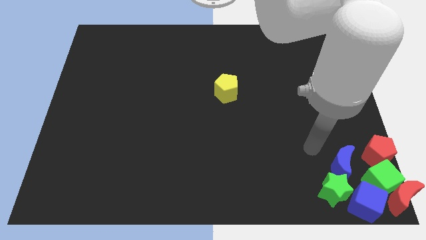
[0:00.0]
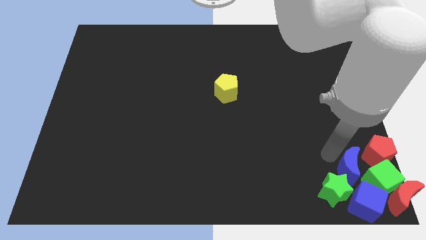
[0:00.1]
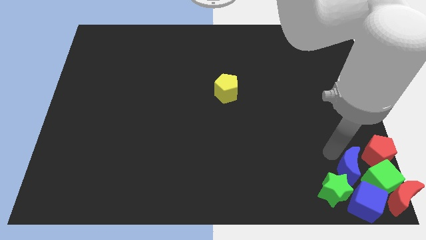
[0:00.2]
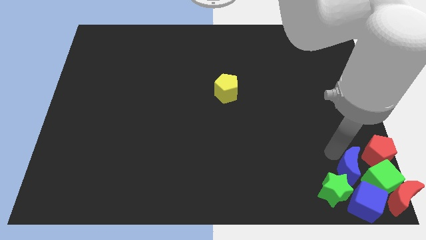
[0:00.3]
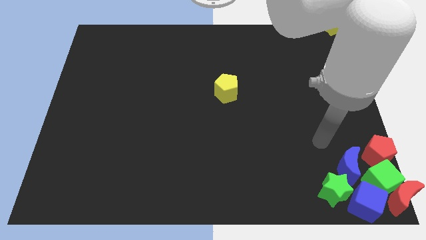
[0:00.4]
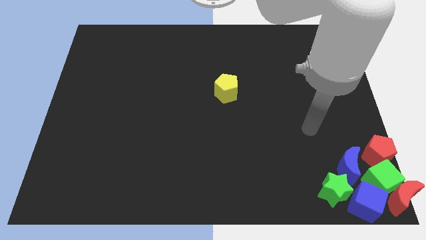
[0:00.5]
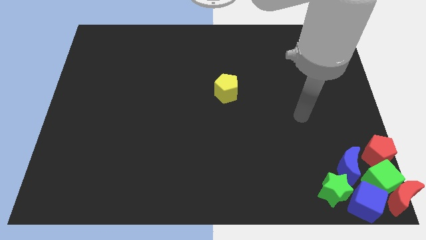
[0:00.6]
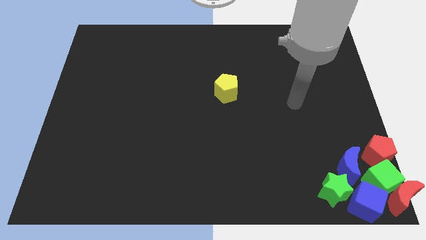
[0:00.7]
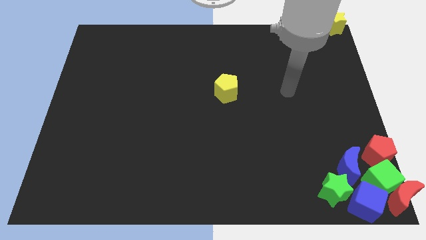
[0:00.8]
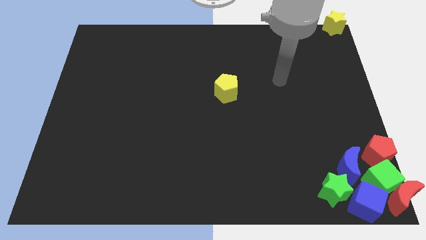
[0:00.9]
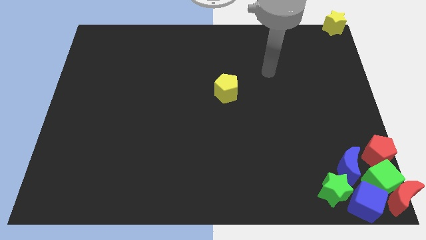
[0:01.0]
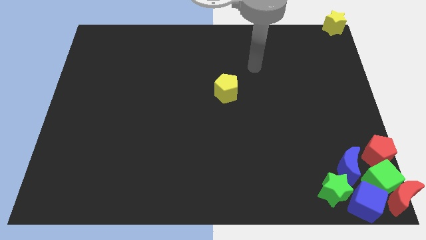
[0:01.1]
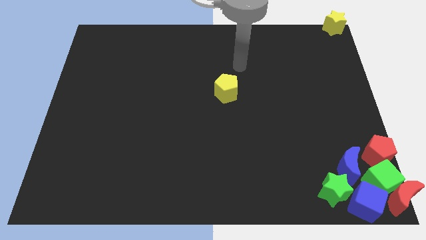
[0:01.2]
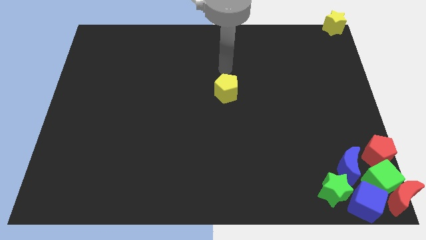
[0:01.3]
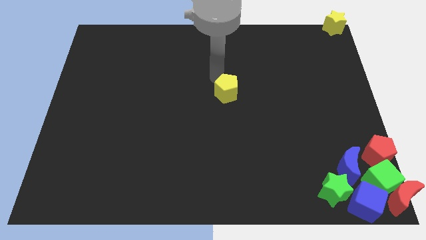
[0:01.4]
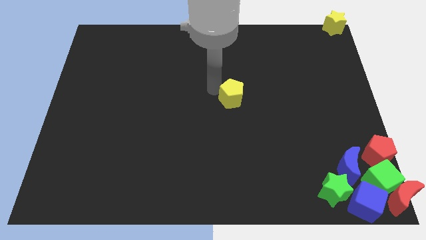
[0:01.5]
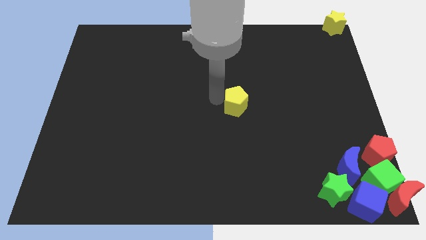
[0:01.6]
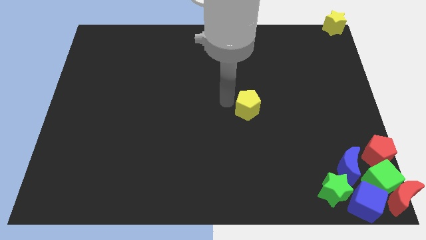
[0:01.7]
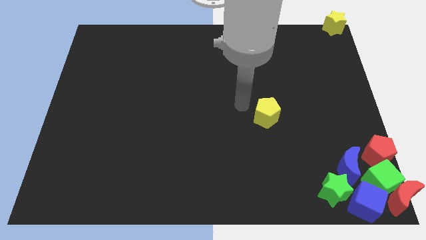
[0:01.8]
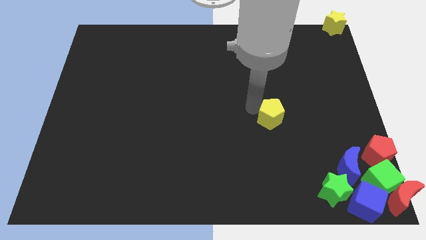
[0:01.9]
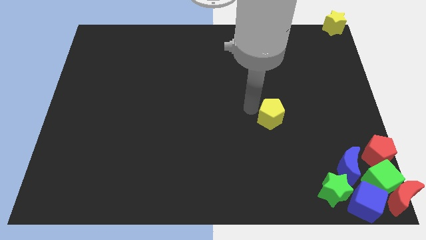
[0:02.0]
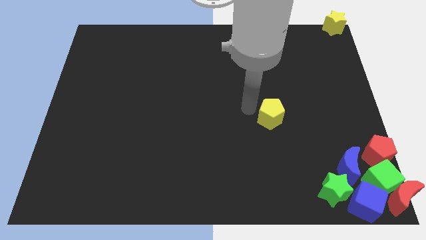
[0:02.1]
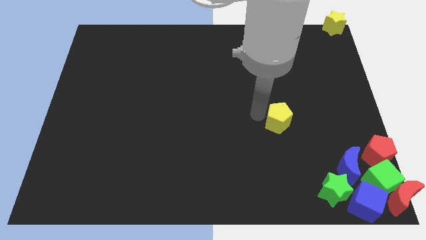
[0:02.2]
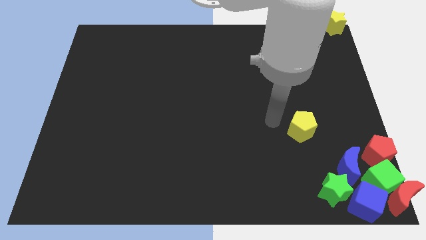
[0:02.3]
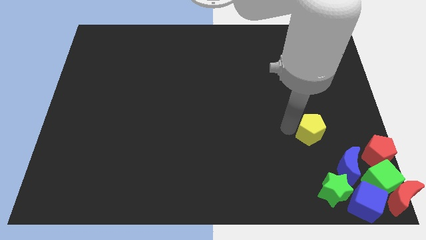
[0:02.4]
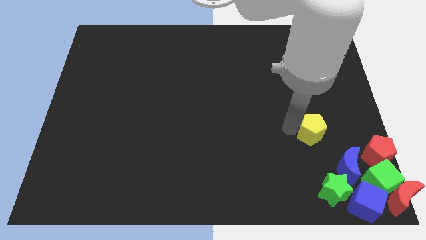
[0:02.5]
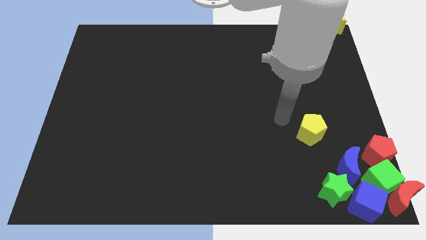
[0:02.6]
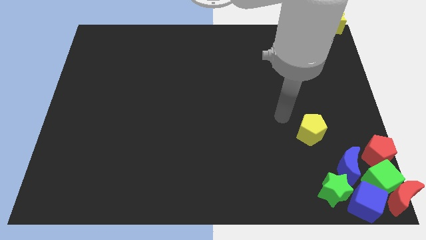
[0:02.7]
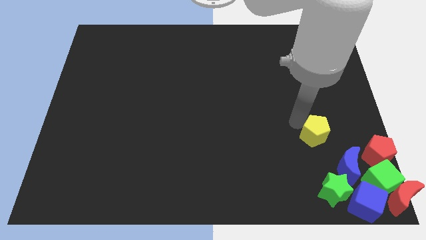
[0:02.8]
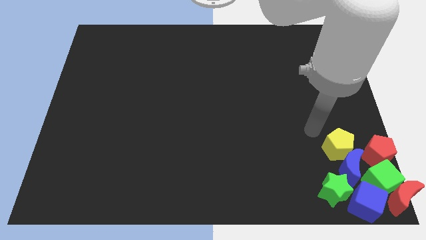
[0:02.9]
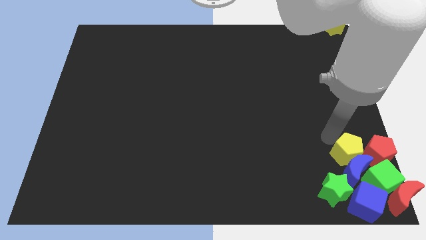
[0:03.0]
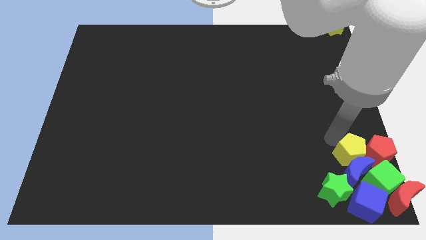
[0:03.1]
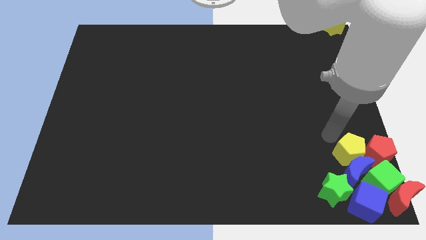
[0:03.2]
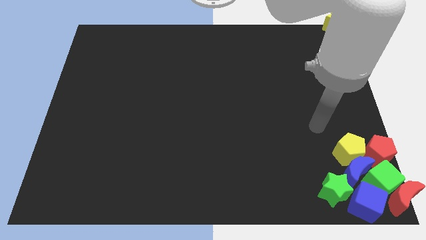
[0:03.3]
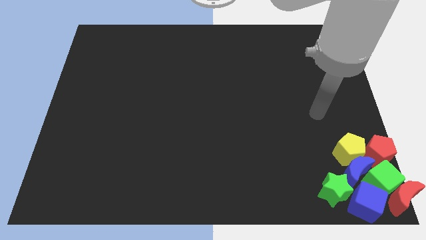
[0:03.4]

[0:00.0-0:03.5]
place yellow pentagon above blue crescent

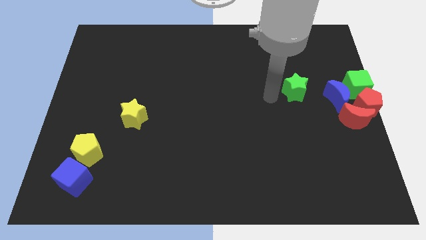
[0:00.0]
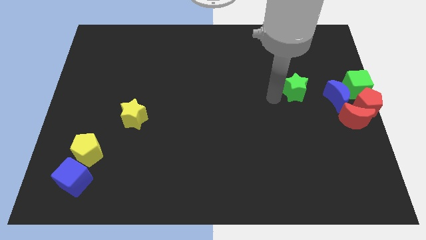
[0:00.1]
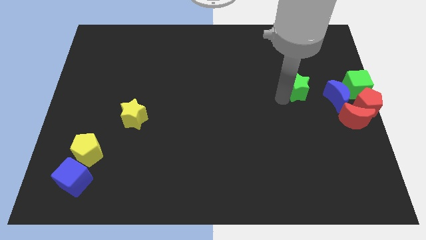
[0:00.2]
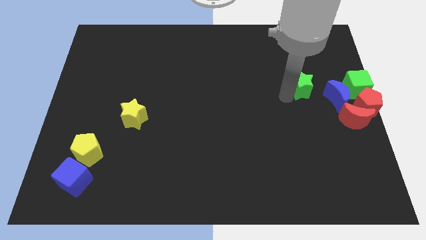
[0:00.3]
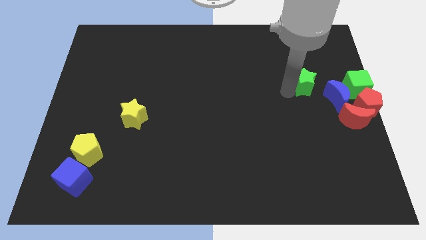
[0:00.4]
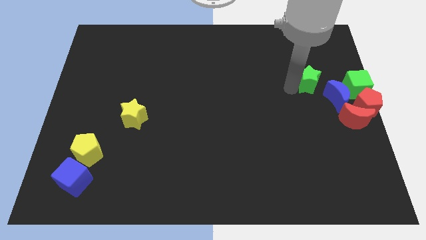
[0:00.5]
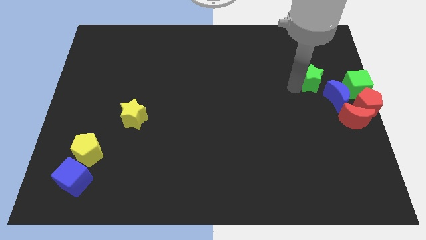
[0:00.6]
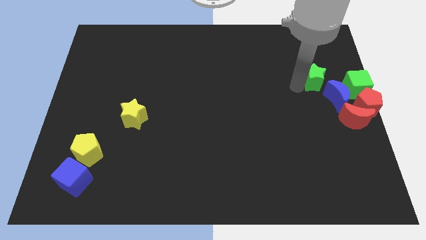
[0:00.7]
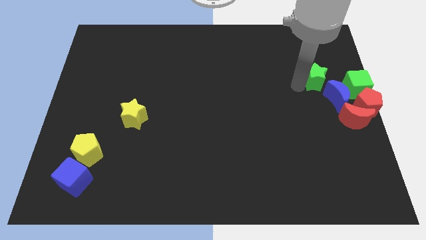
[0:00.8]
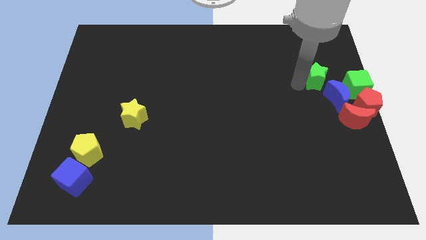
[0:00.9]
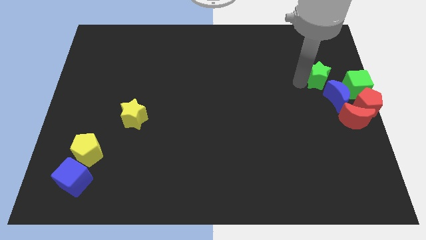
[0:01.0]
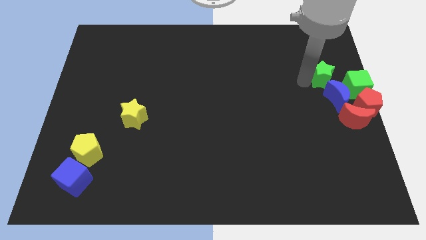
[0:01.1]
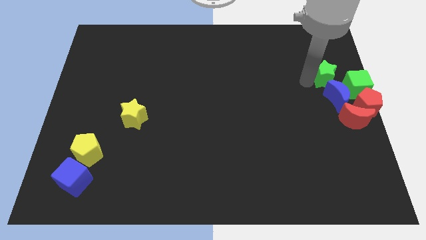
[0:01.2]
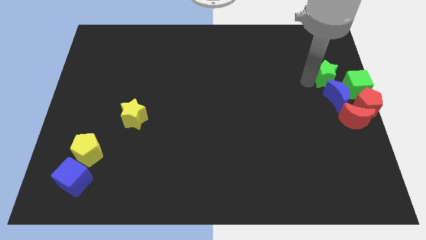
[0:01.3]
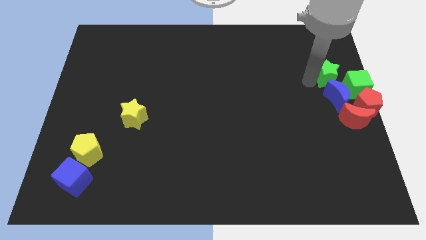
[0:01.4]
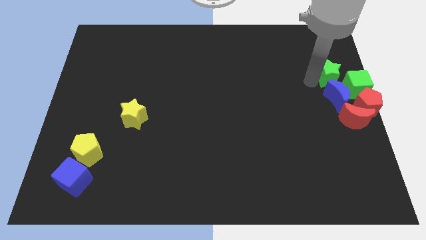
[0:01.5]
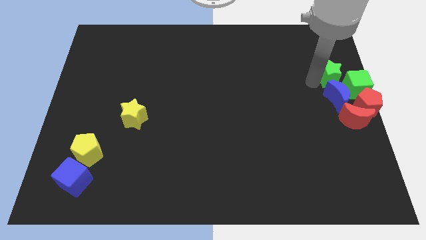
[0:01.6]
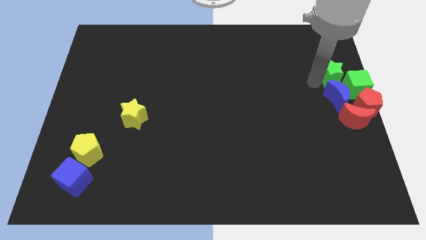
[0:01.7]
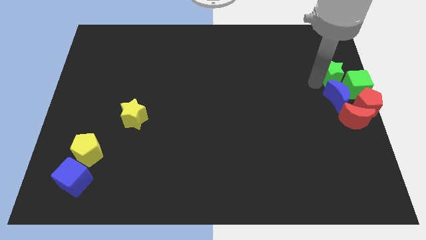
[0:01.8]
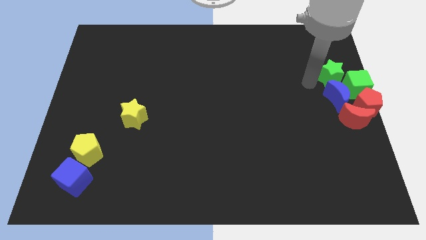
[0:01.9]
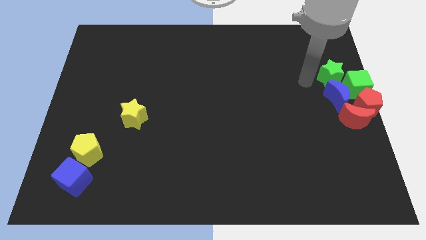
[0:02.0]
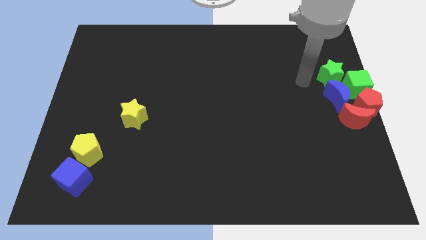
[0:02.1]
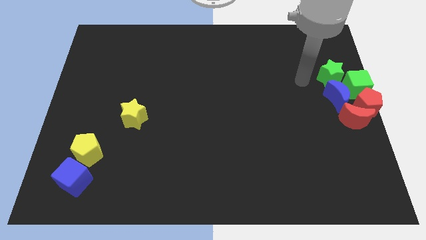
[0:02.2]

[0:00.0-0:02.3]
move the green star above the blue moon

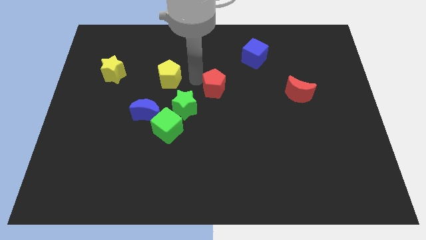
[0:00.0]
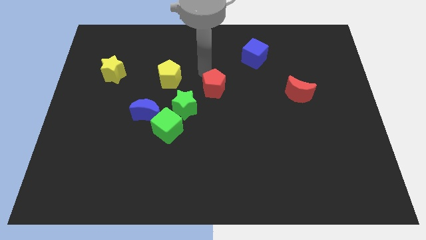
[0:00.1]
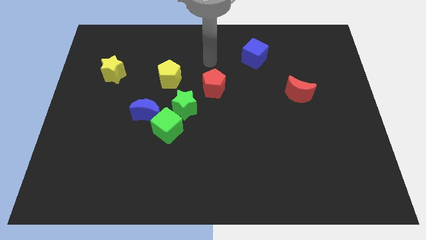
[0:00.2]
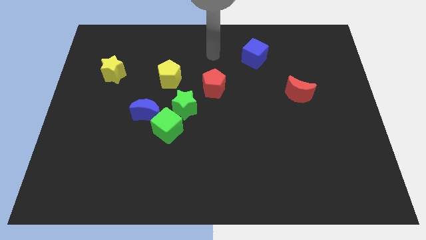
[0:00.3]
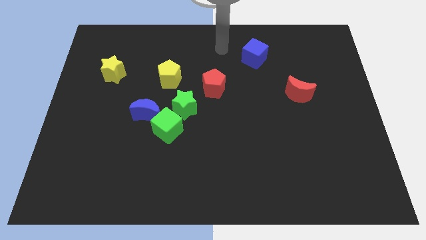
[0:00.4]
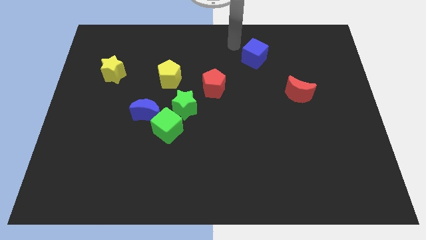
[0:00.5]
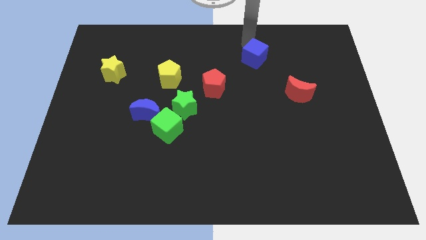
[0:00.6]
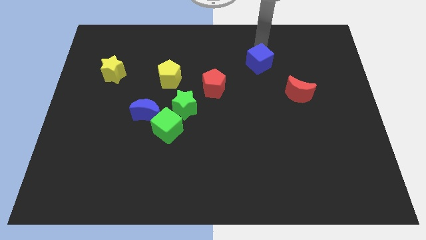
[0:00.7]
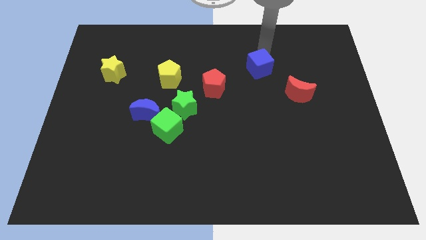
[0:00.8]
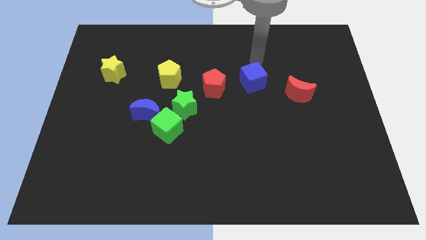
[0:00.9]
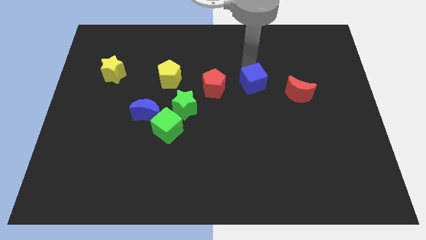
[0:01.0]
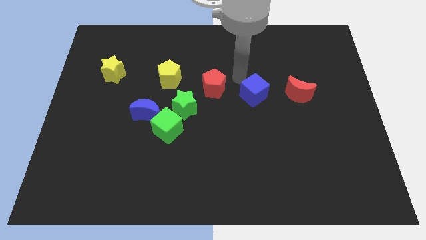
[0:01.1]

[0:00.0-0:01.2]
move the blue cube down slightly

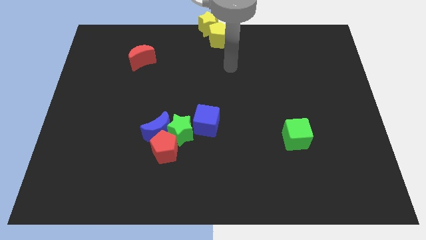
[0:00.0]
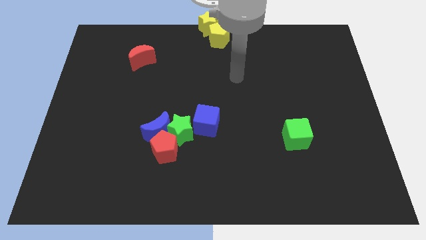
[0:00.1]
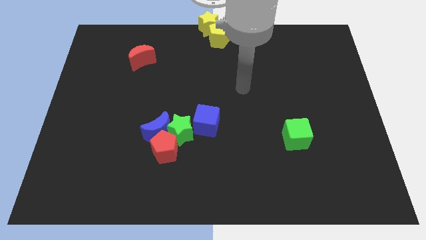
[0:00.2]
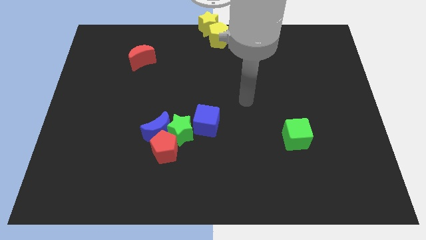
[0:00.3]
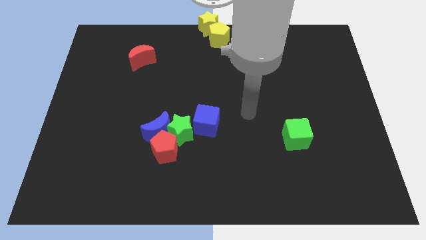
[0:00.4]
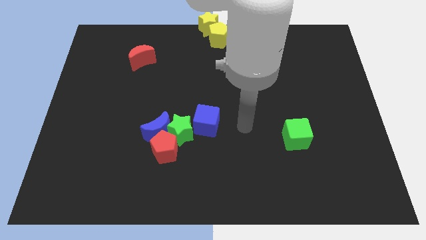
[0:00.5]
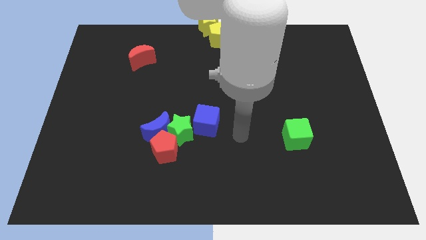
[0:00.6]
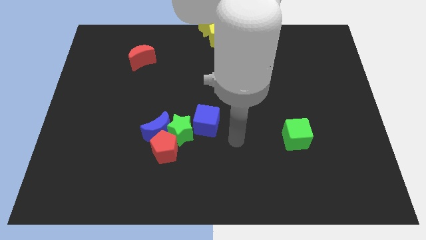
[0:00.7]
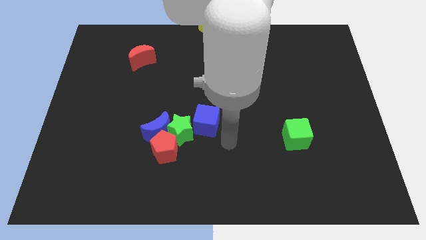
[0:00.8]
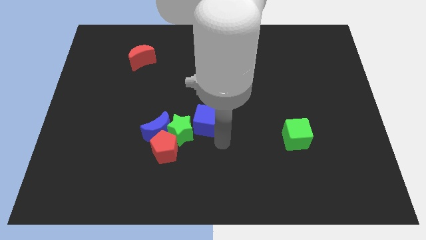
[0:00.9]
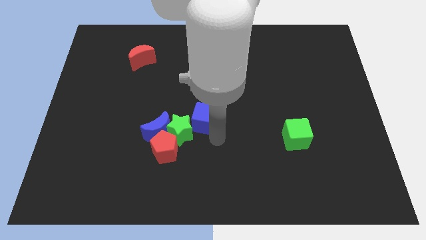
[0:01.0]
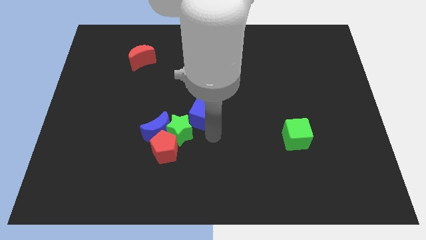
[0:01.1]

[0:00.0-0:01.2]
tap the blue cube

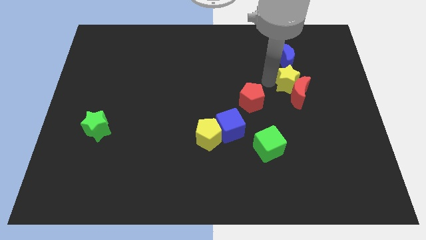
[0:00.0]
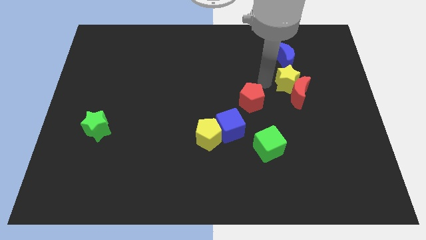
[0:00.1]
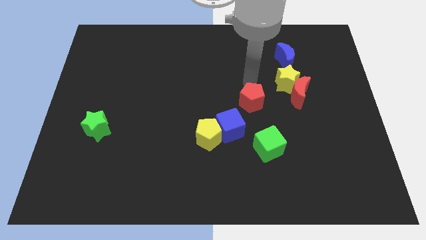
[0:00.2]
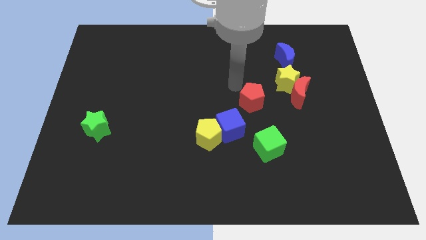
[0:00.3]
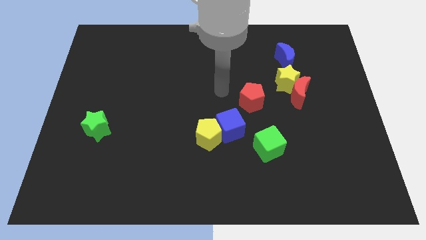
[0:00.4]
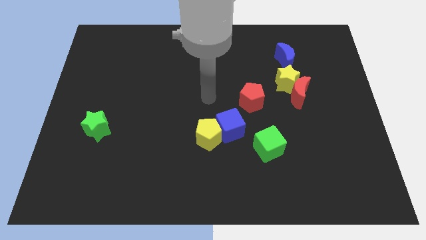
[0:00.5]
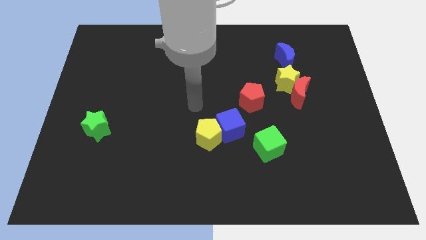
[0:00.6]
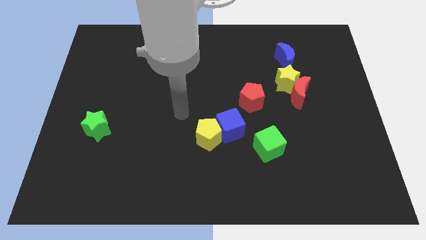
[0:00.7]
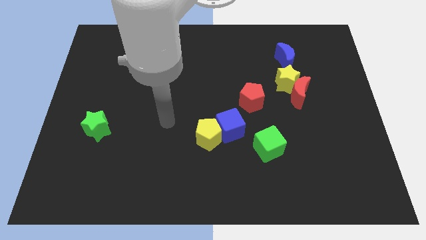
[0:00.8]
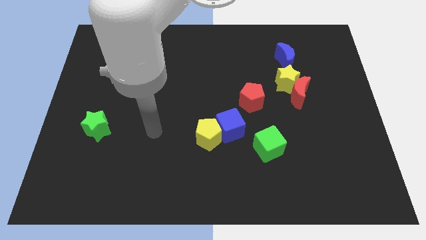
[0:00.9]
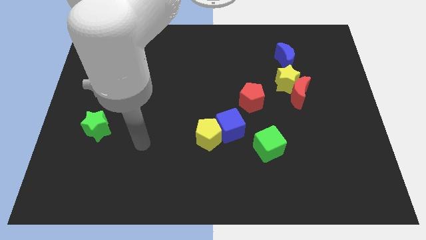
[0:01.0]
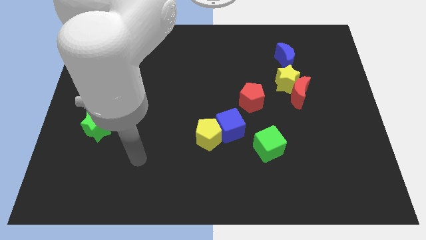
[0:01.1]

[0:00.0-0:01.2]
move your arm towards the bottom side of the board
